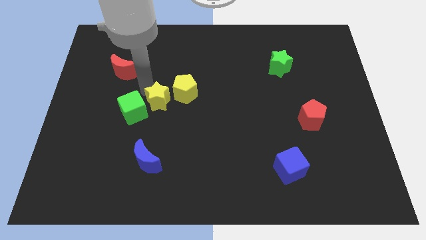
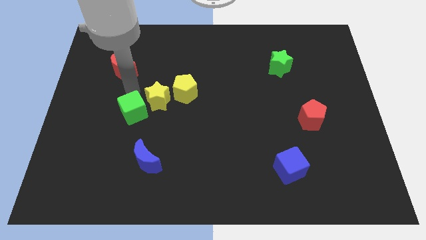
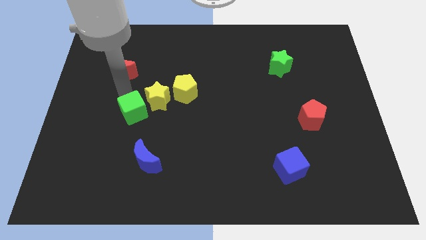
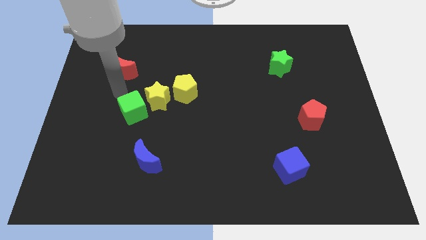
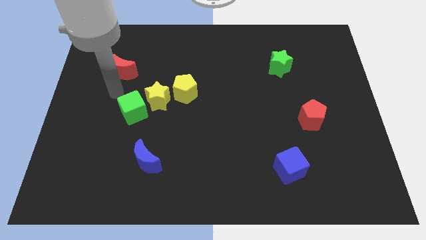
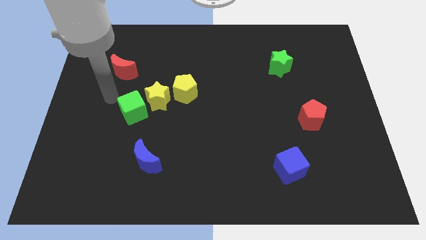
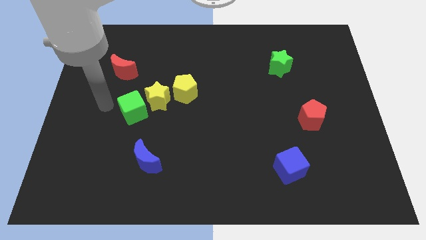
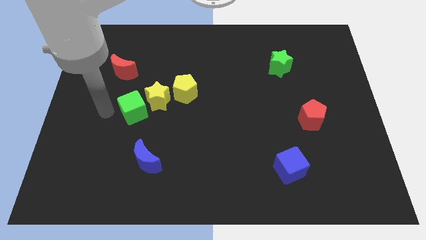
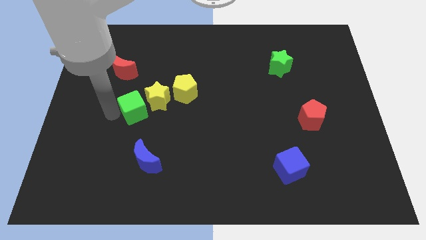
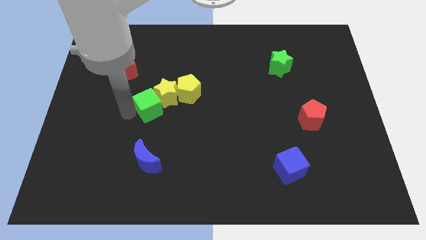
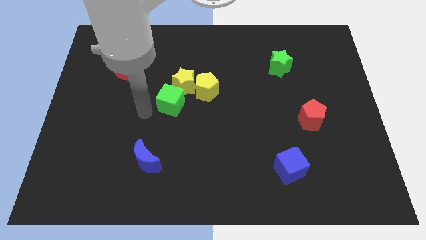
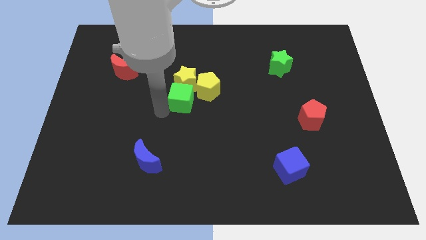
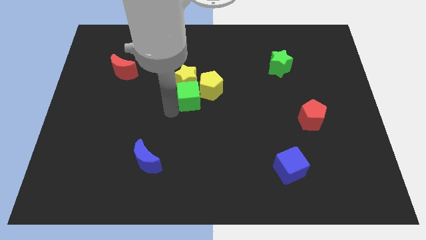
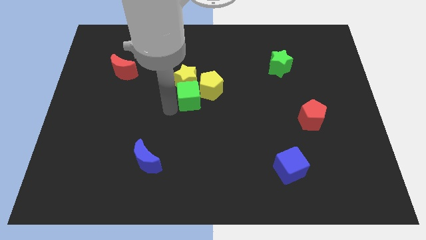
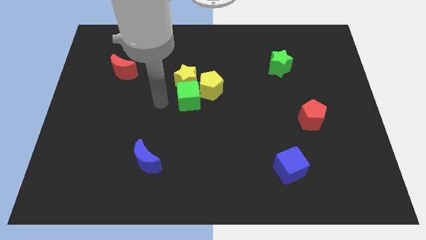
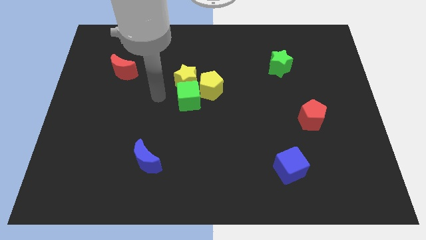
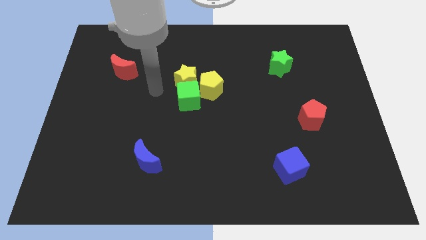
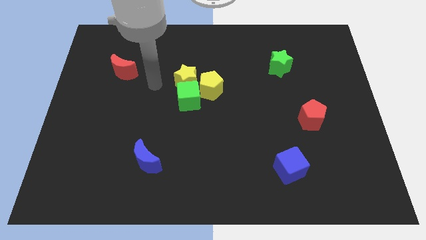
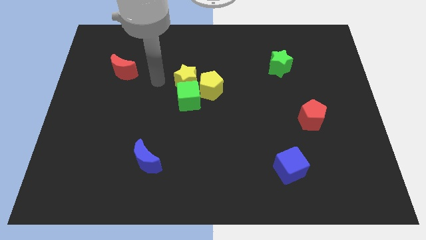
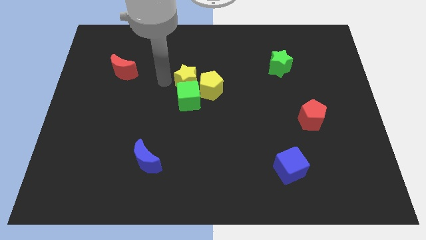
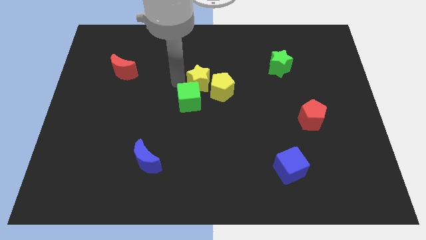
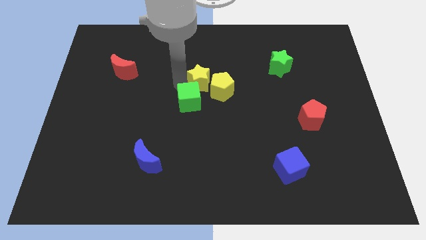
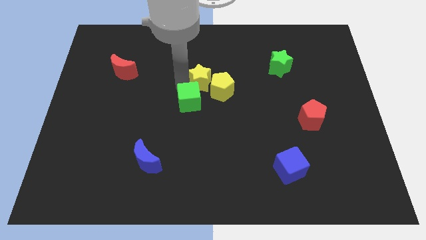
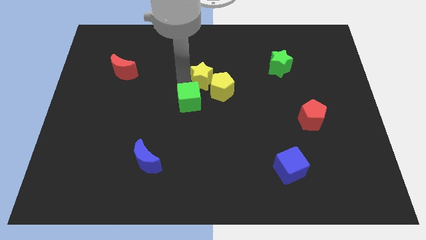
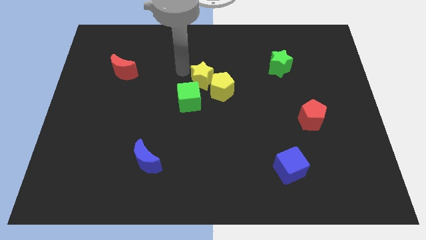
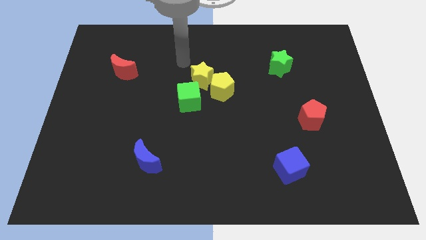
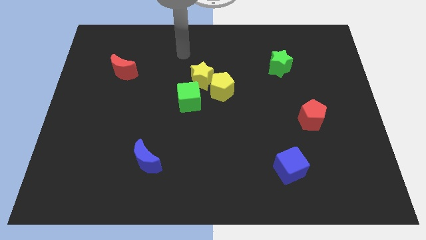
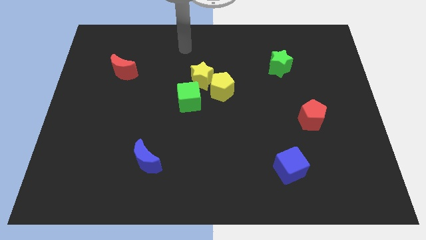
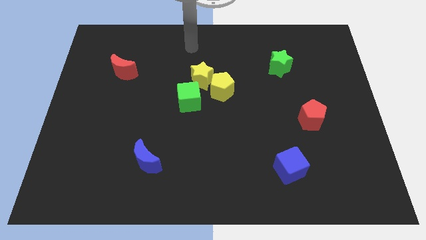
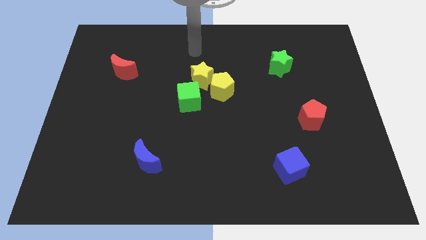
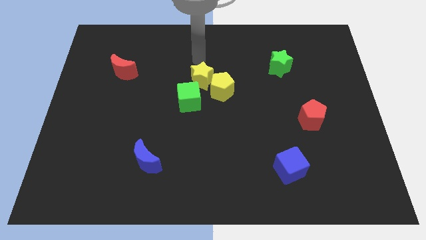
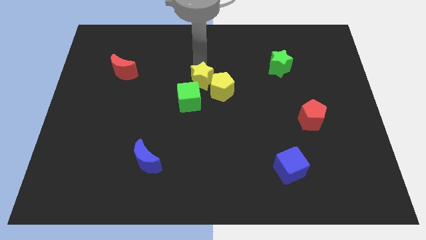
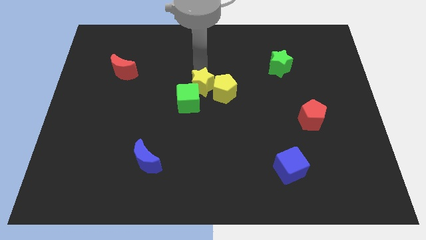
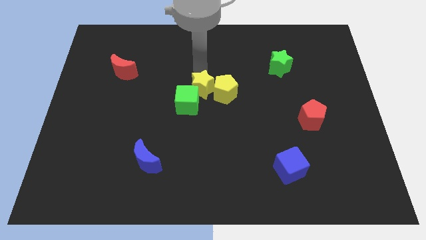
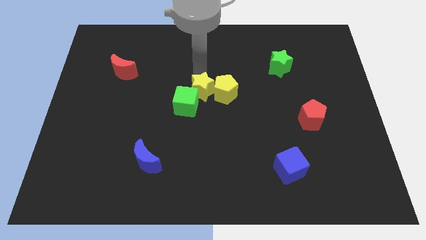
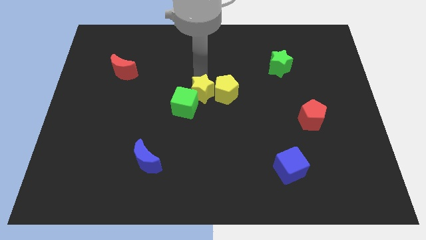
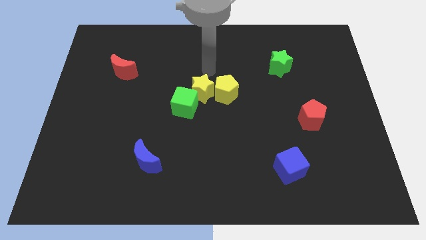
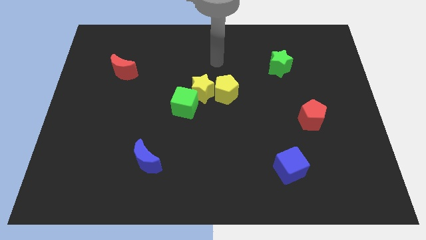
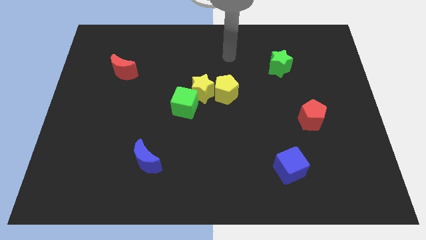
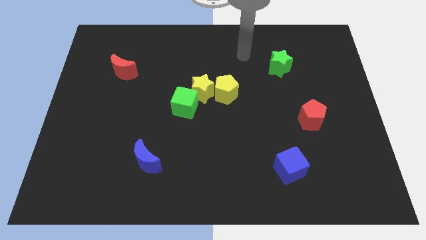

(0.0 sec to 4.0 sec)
move the green cube and yellow blocks to the center of the board

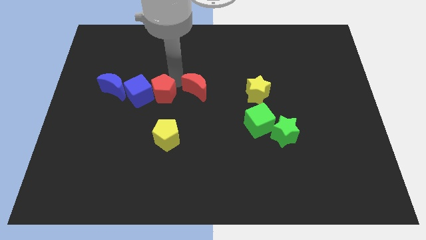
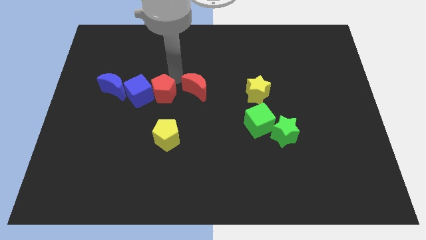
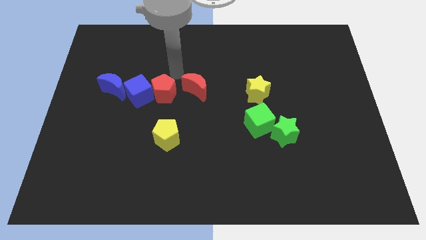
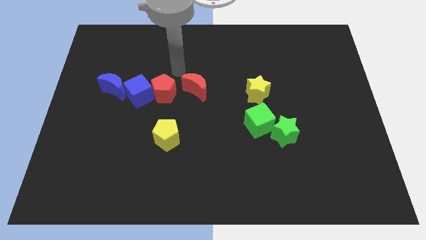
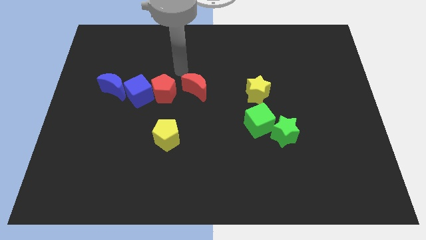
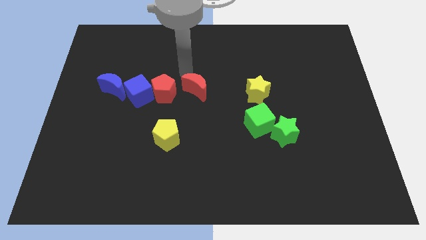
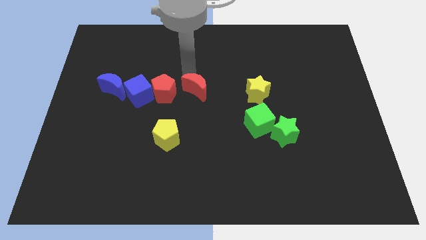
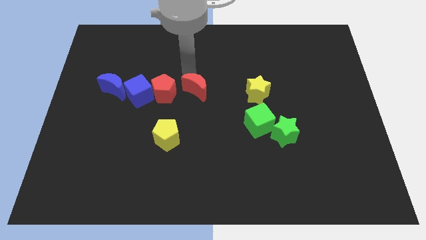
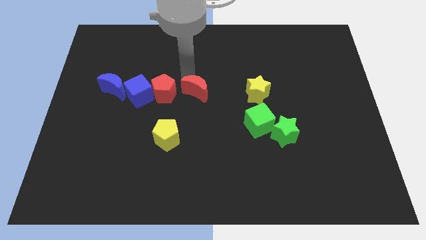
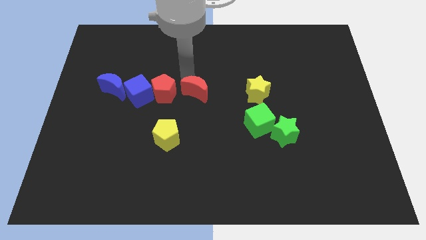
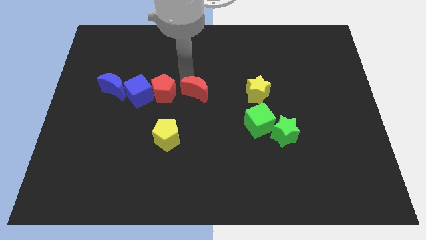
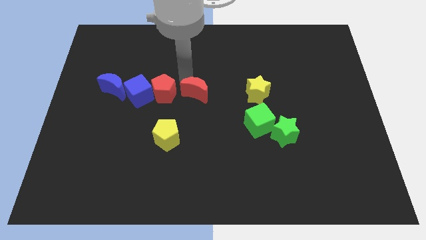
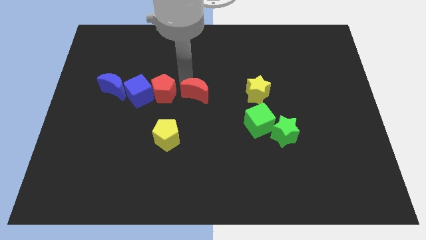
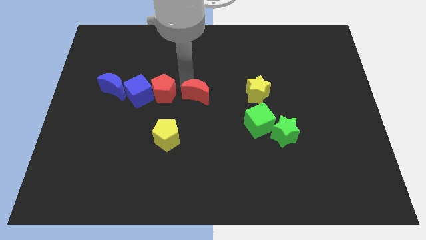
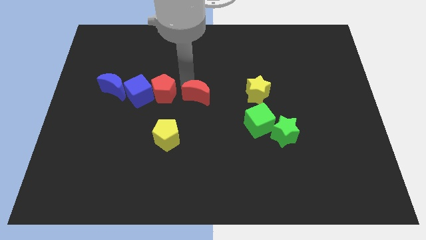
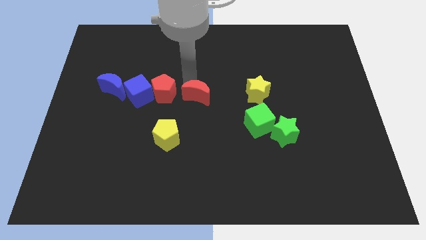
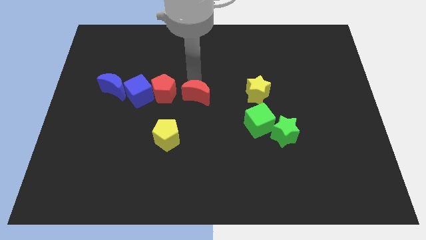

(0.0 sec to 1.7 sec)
place red moon close to red pentagon

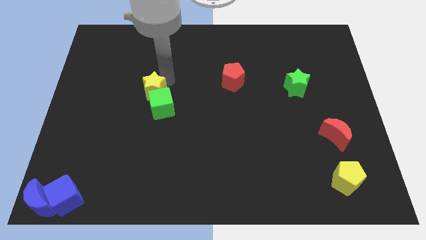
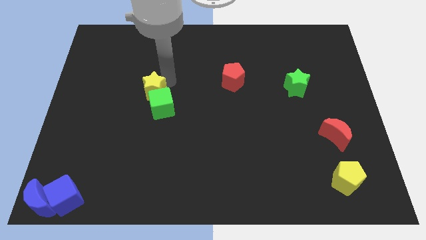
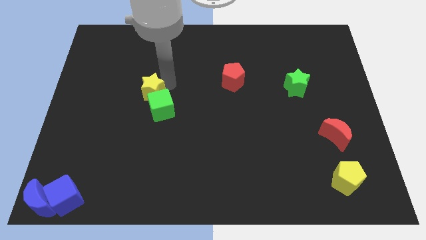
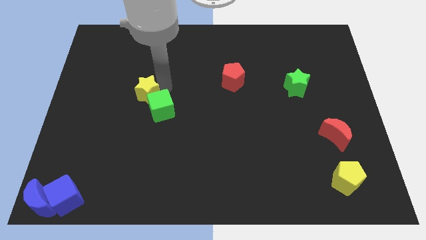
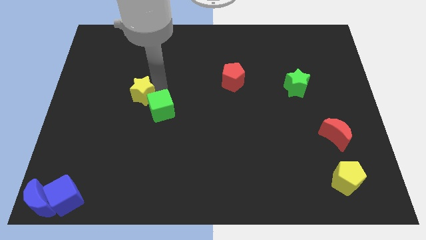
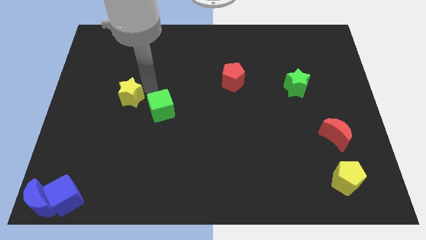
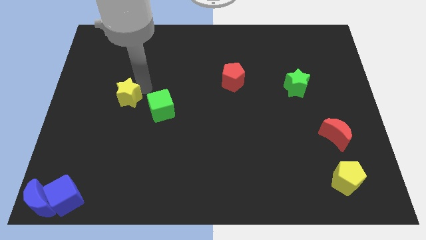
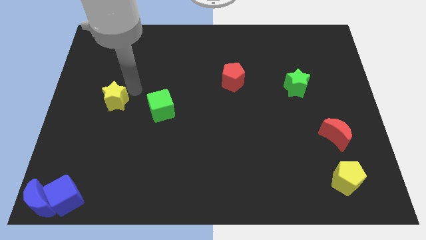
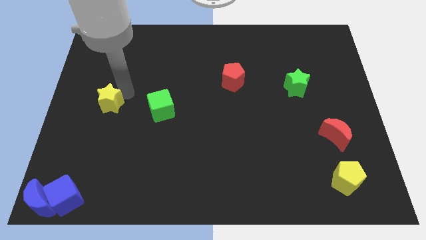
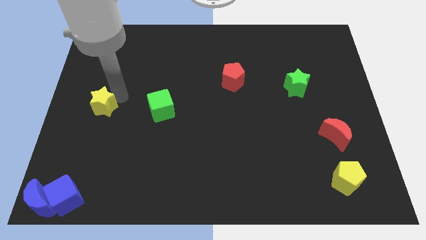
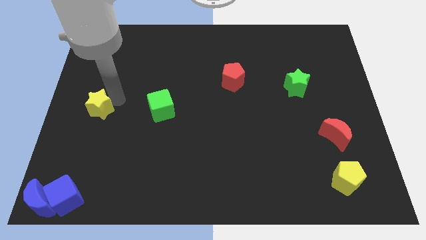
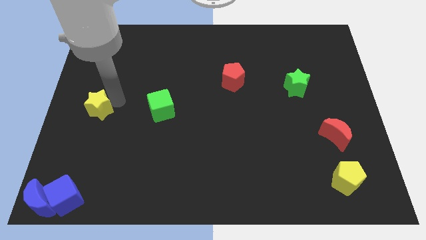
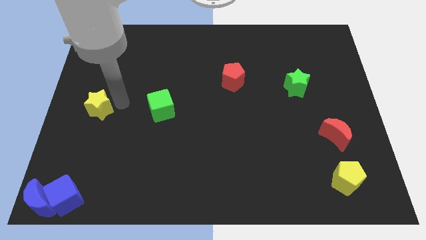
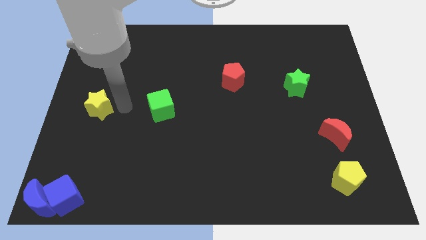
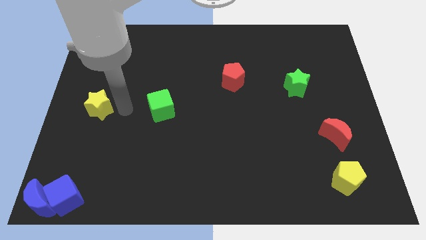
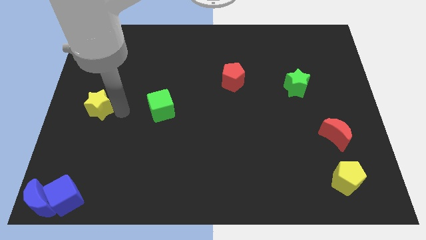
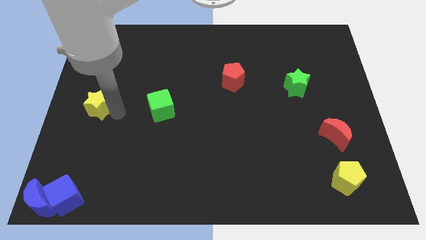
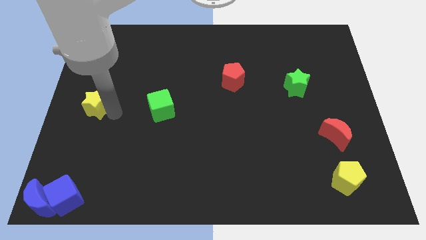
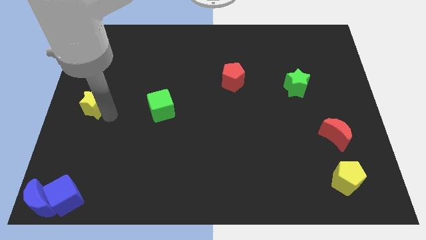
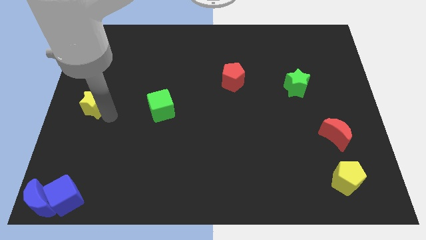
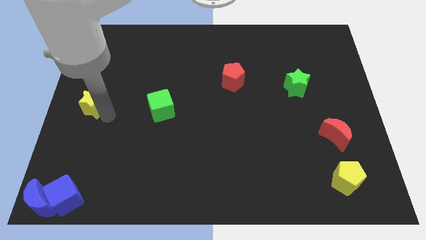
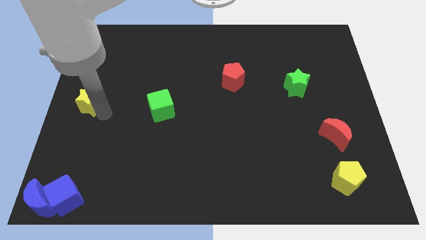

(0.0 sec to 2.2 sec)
separate the yellow star away from the green cube

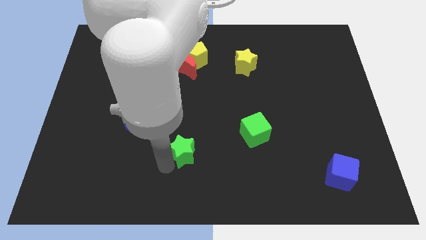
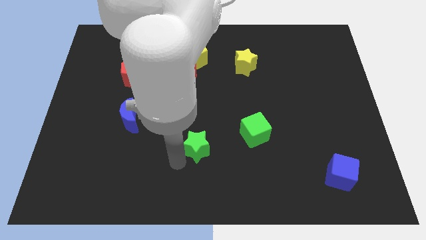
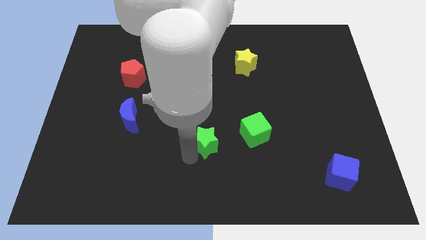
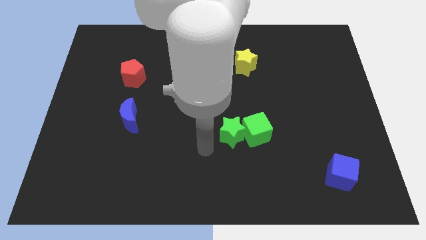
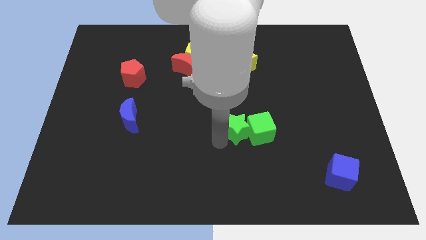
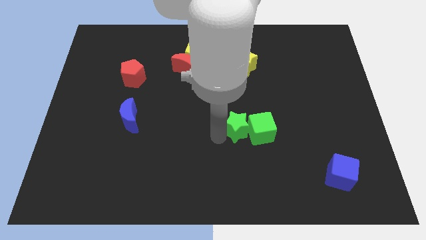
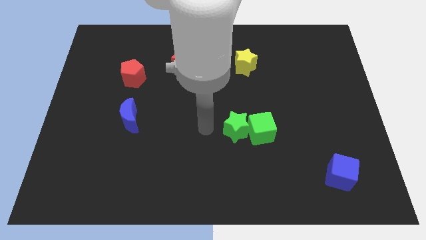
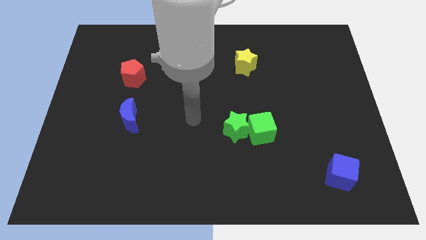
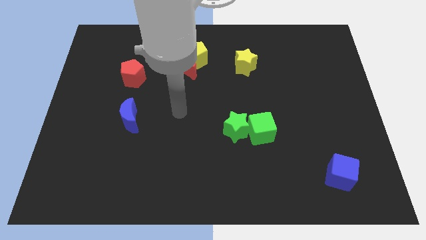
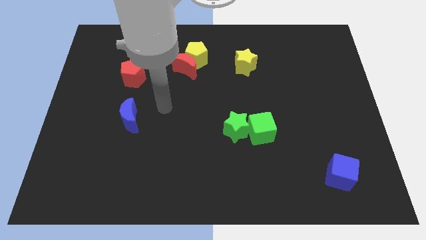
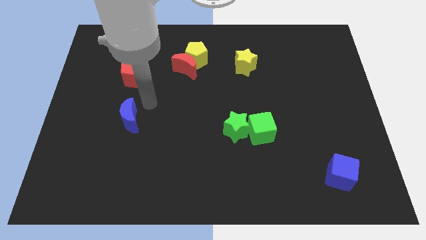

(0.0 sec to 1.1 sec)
move green star into green cube
